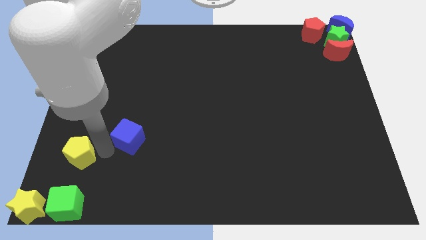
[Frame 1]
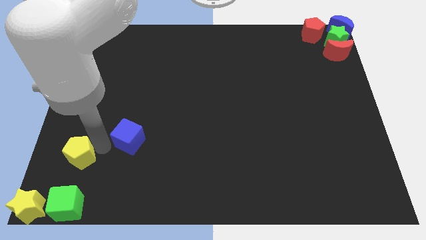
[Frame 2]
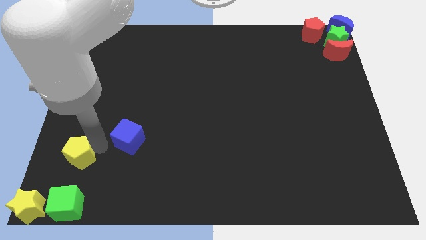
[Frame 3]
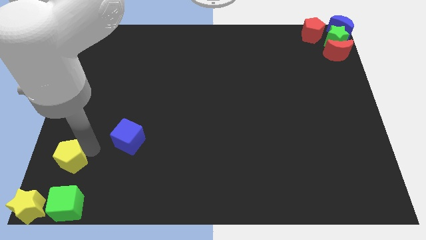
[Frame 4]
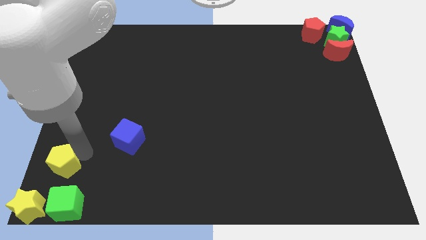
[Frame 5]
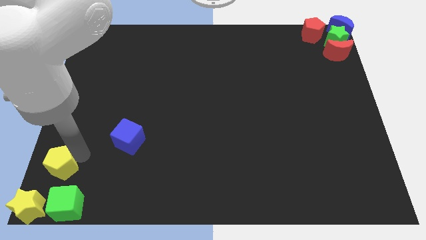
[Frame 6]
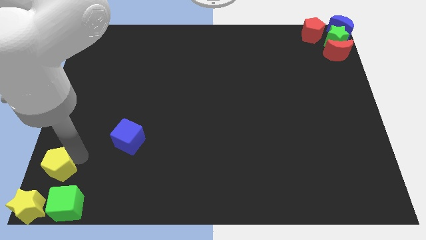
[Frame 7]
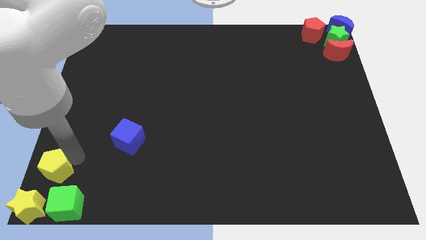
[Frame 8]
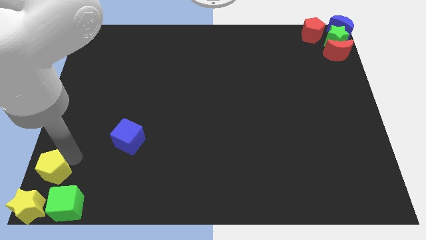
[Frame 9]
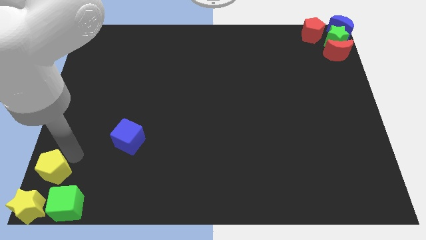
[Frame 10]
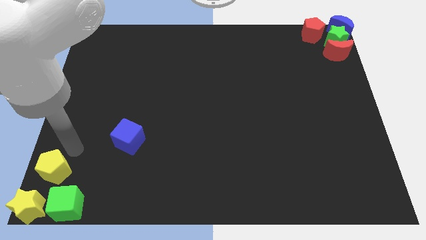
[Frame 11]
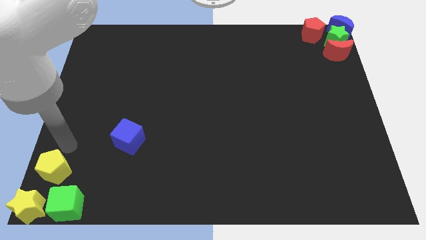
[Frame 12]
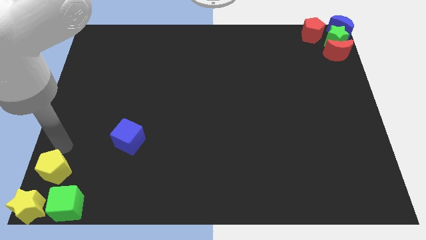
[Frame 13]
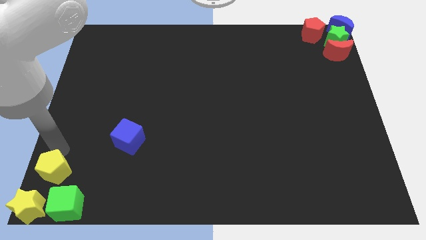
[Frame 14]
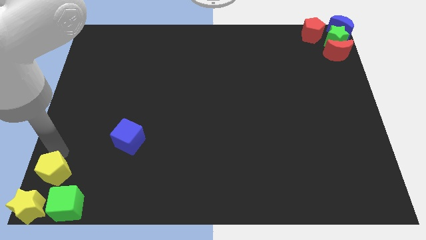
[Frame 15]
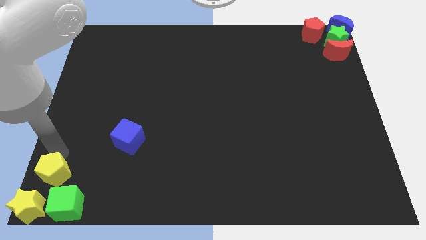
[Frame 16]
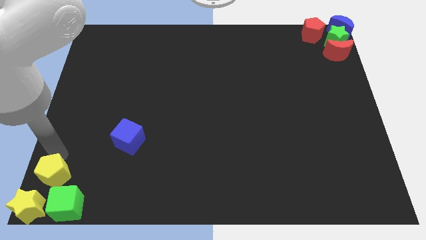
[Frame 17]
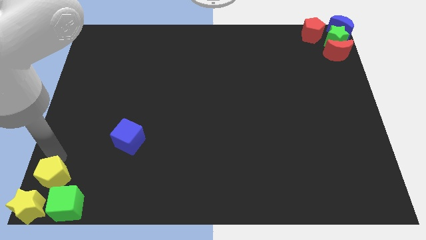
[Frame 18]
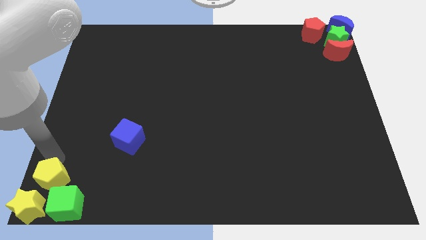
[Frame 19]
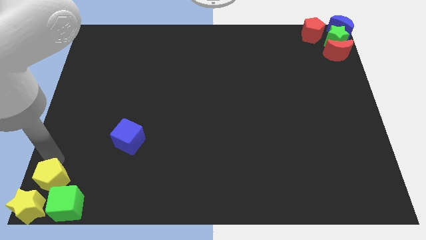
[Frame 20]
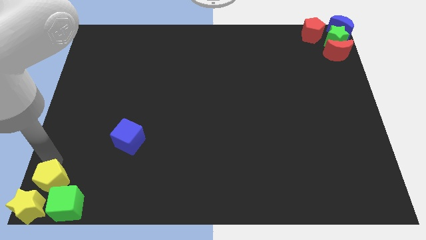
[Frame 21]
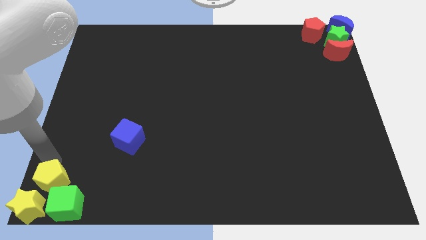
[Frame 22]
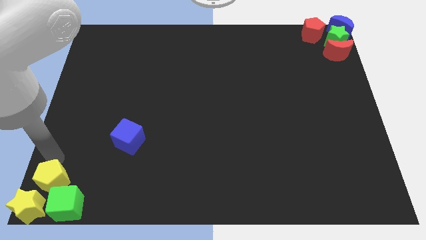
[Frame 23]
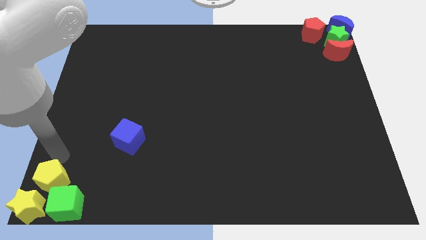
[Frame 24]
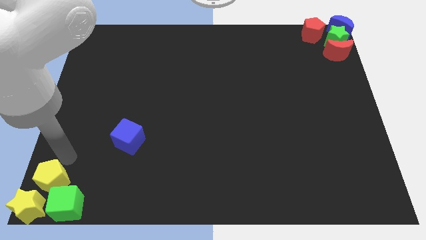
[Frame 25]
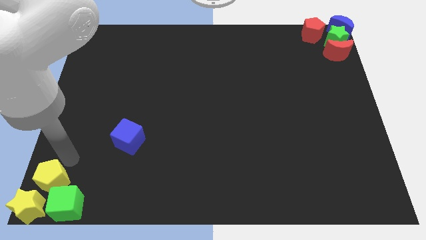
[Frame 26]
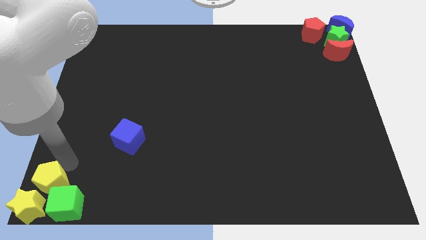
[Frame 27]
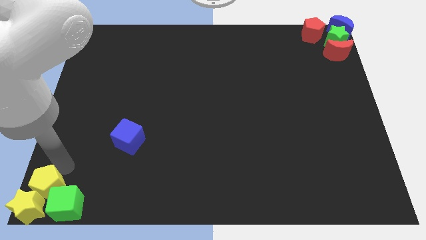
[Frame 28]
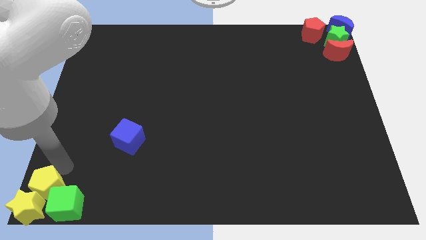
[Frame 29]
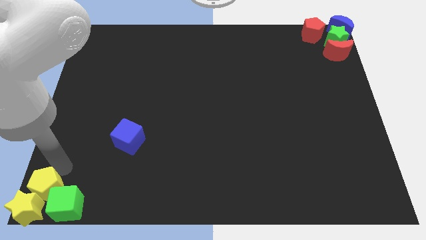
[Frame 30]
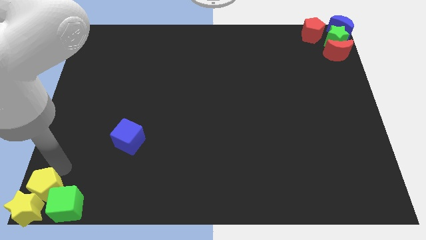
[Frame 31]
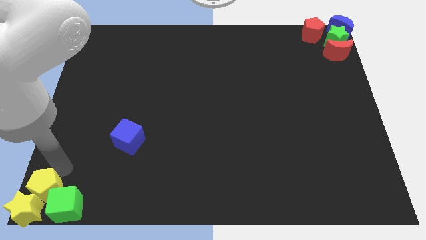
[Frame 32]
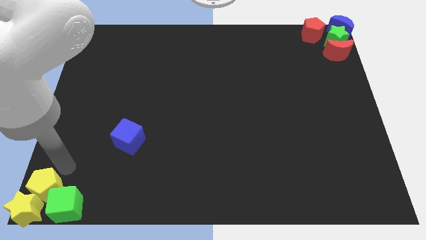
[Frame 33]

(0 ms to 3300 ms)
move the yellow pentagon into the yellow star

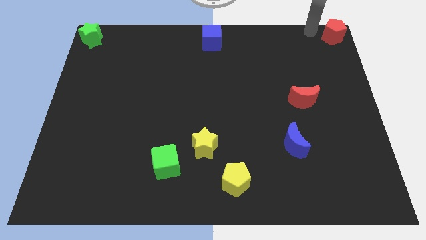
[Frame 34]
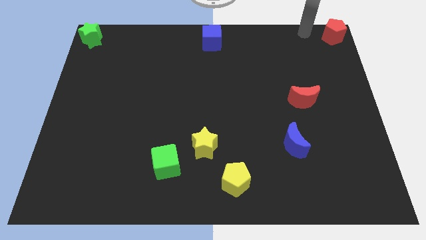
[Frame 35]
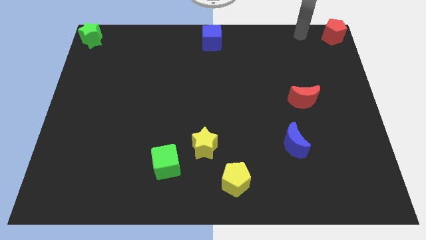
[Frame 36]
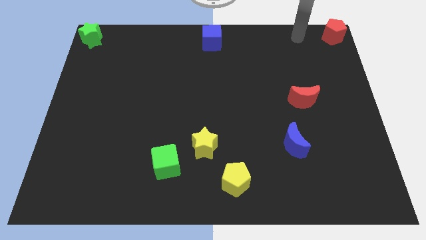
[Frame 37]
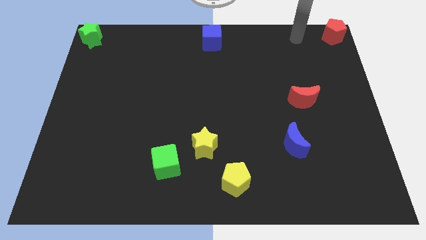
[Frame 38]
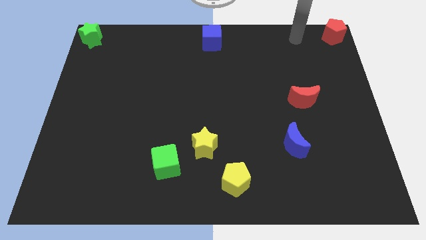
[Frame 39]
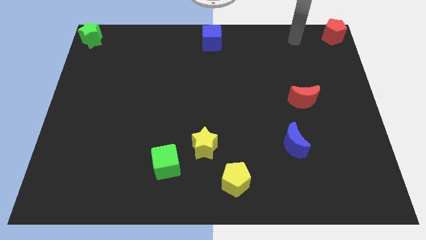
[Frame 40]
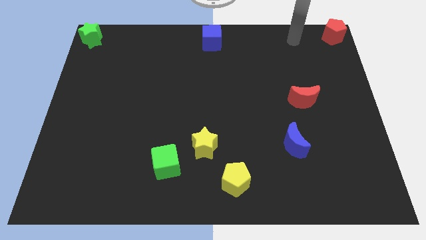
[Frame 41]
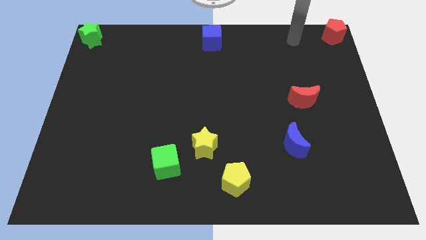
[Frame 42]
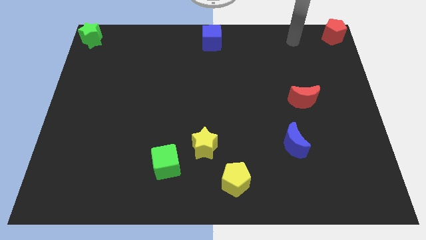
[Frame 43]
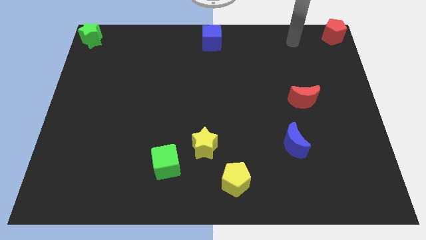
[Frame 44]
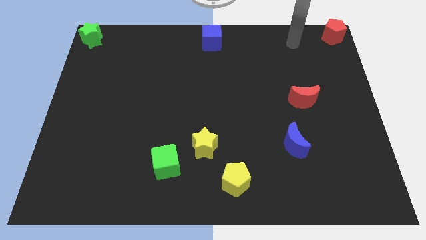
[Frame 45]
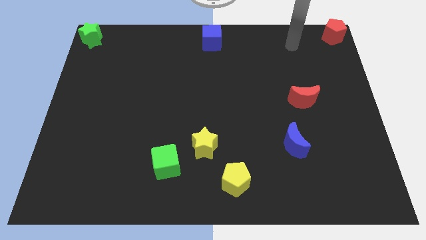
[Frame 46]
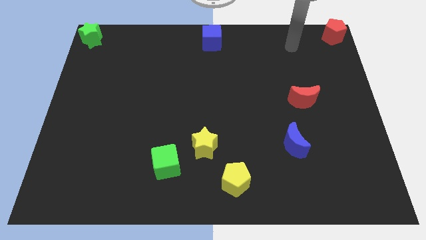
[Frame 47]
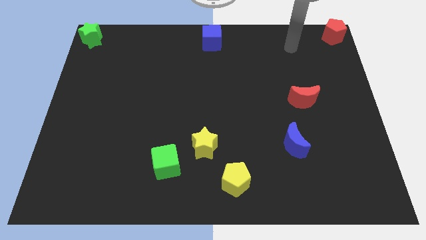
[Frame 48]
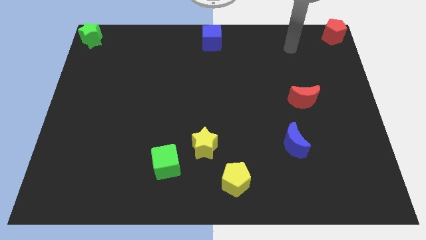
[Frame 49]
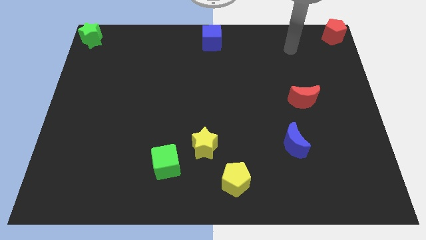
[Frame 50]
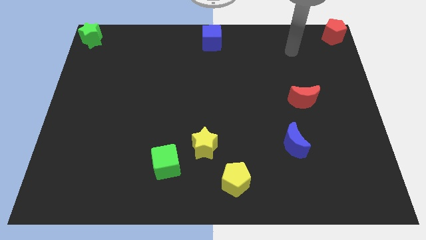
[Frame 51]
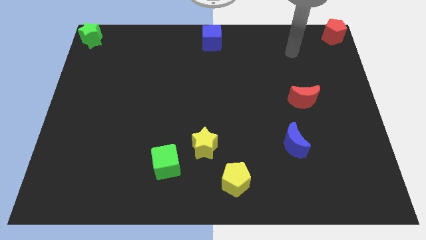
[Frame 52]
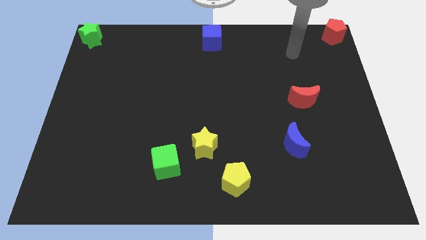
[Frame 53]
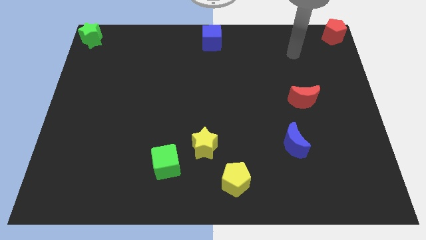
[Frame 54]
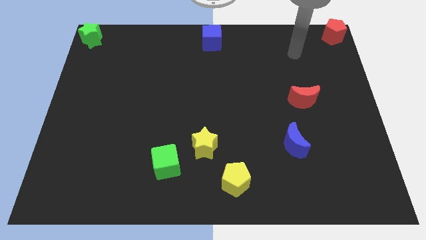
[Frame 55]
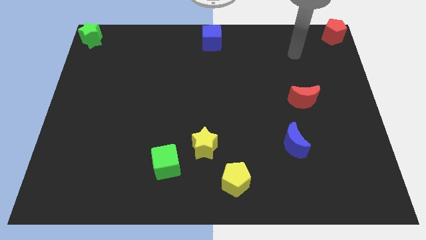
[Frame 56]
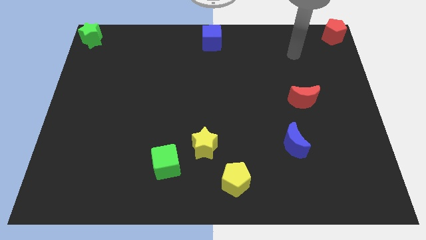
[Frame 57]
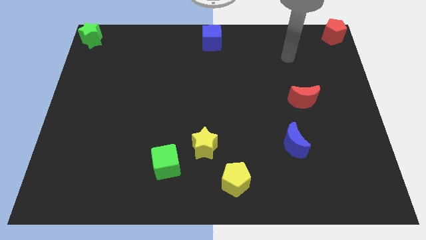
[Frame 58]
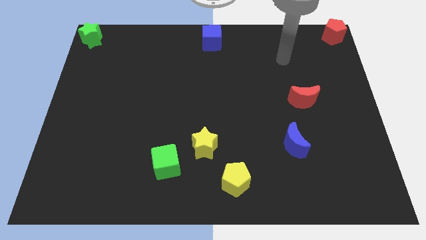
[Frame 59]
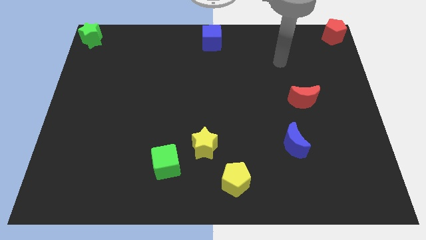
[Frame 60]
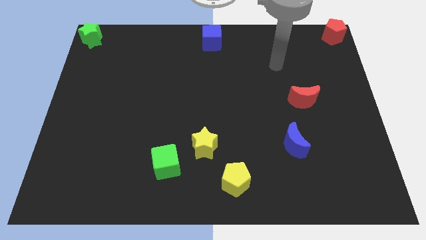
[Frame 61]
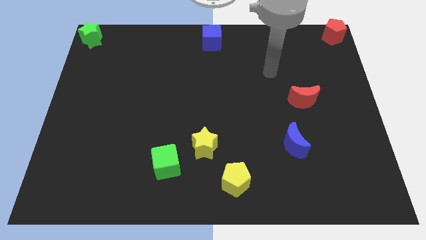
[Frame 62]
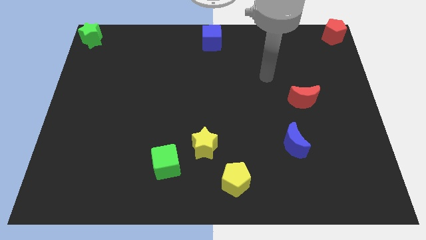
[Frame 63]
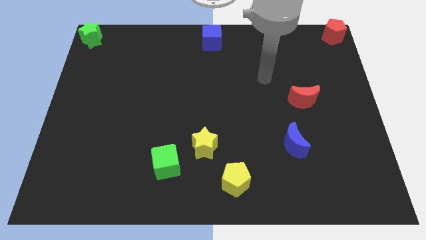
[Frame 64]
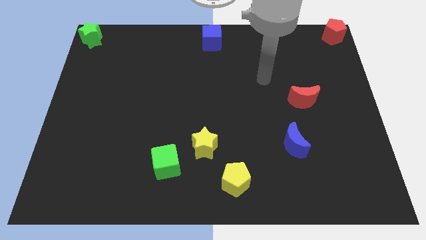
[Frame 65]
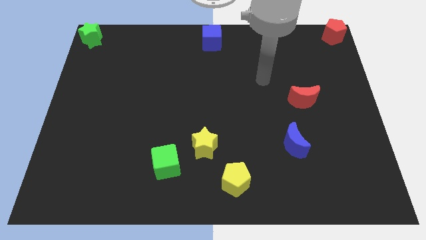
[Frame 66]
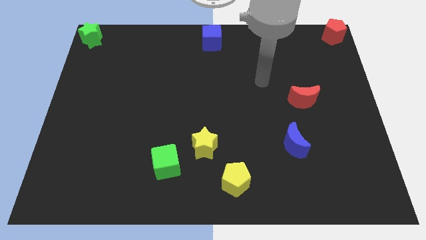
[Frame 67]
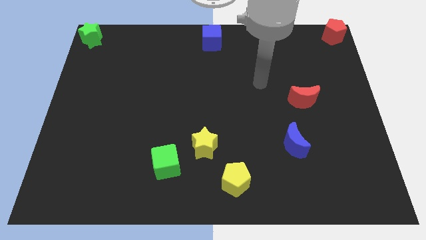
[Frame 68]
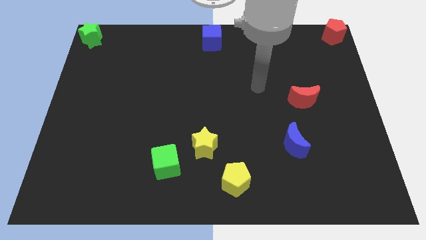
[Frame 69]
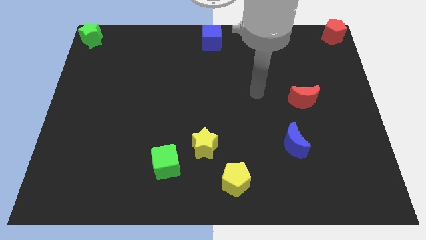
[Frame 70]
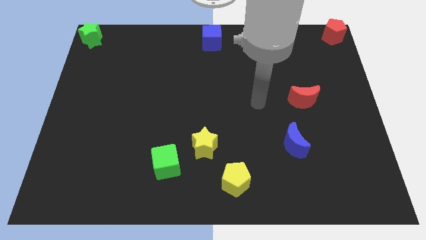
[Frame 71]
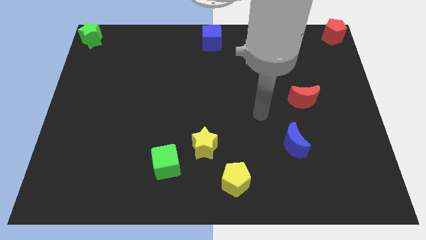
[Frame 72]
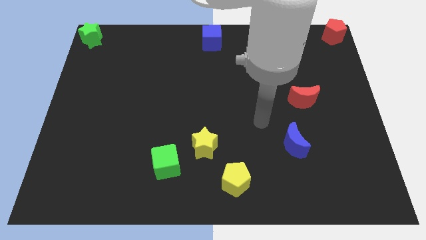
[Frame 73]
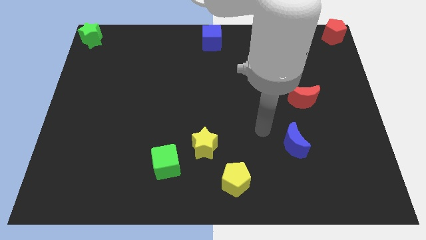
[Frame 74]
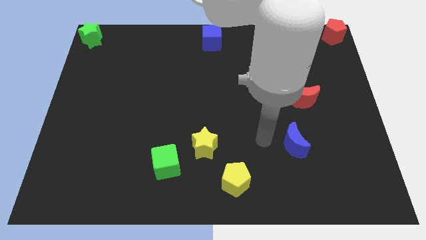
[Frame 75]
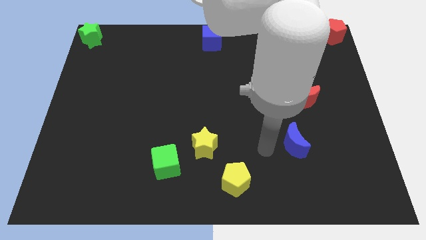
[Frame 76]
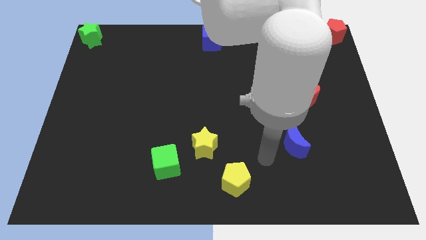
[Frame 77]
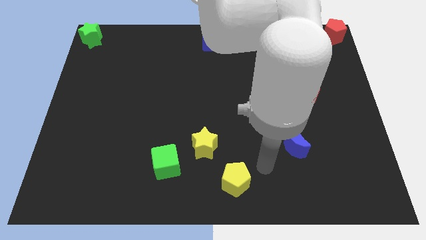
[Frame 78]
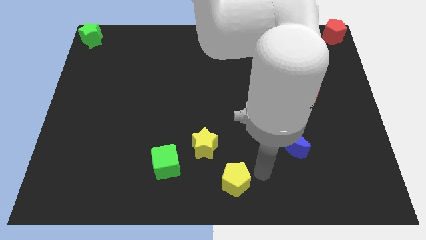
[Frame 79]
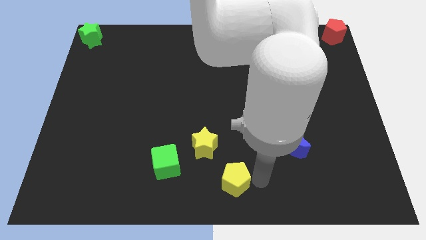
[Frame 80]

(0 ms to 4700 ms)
move the arm towards left of the yellow pentagon

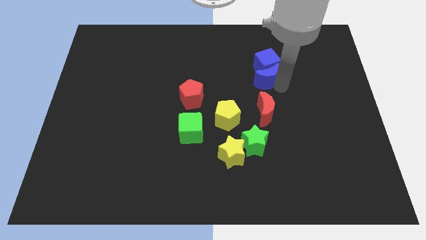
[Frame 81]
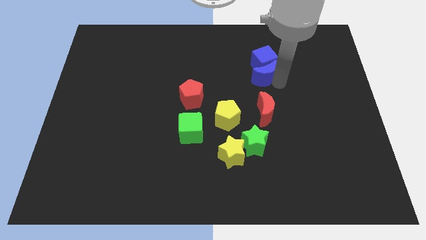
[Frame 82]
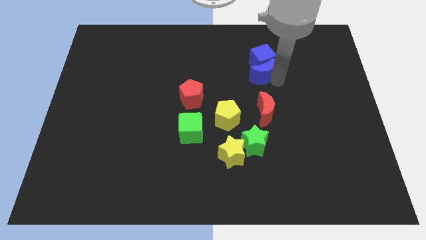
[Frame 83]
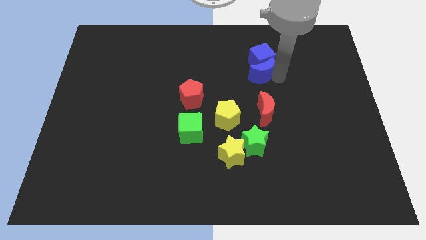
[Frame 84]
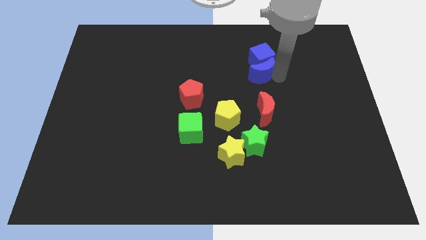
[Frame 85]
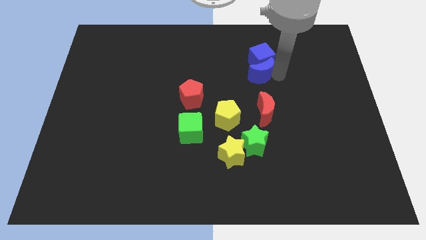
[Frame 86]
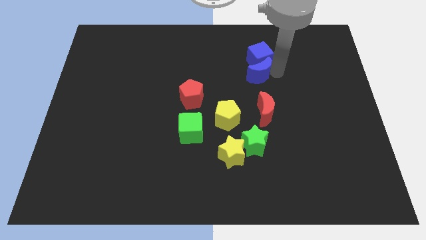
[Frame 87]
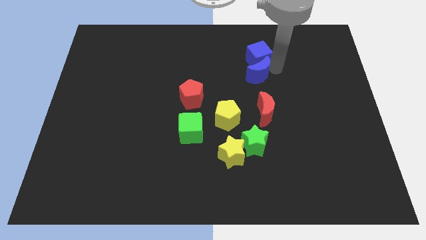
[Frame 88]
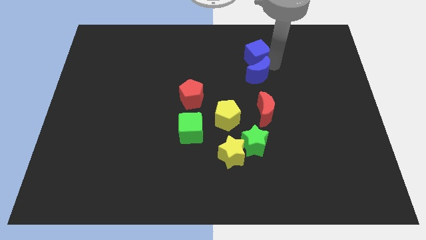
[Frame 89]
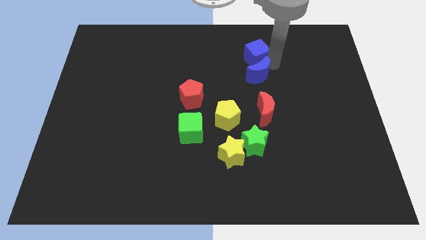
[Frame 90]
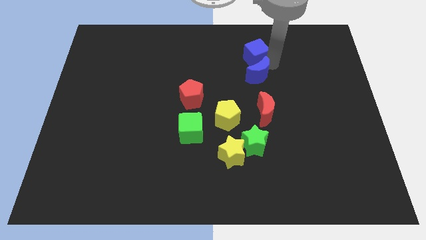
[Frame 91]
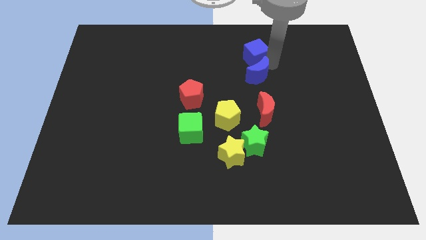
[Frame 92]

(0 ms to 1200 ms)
push blue moon in to blue cube
